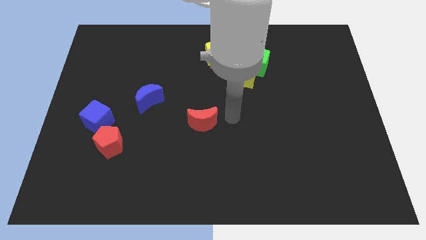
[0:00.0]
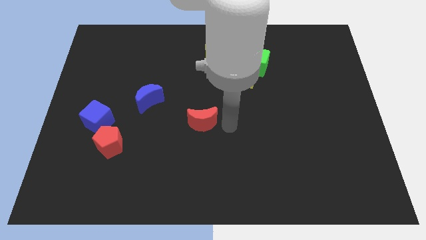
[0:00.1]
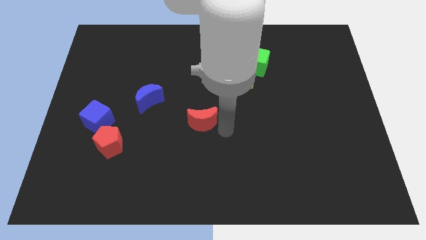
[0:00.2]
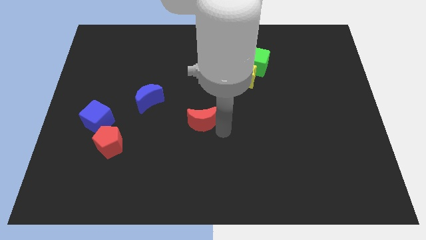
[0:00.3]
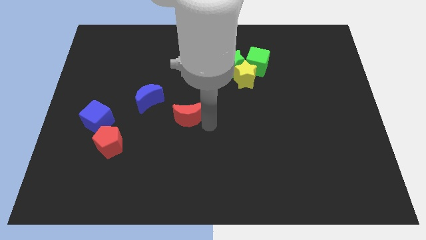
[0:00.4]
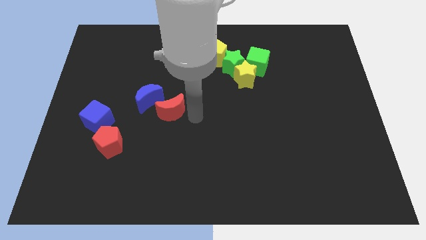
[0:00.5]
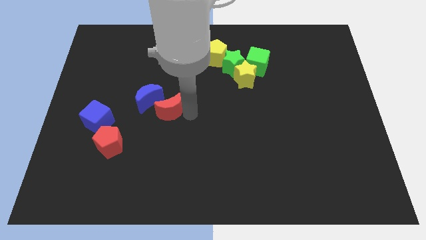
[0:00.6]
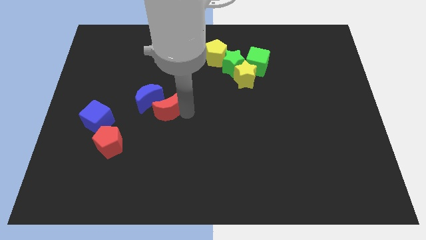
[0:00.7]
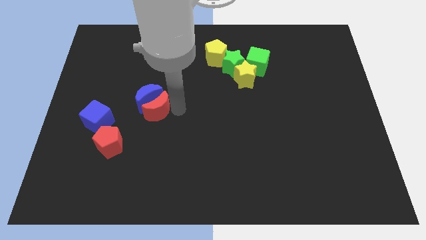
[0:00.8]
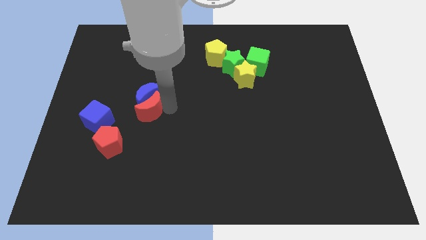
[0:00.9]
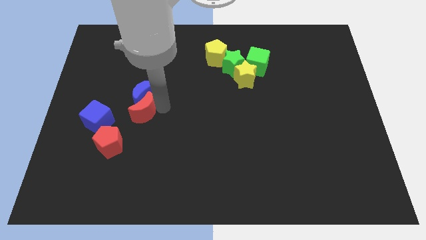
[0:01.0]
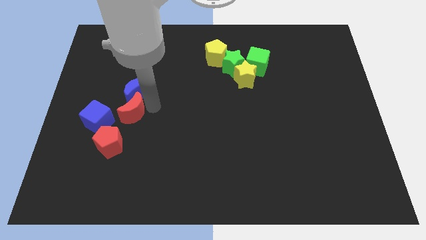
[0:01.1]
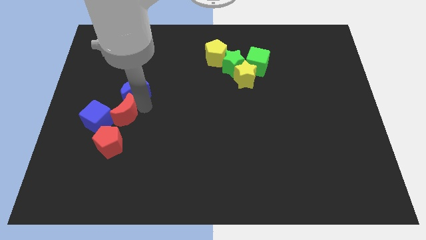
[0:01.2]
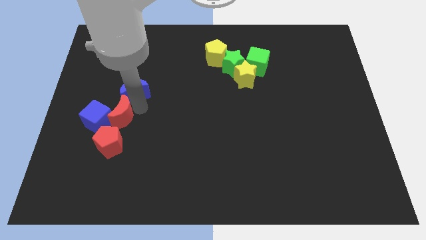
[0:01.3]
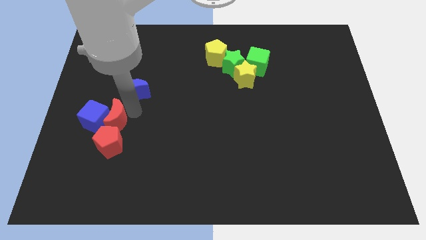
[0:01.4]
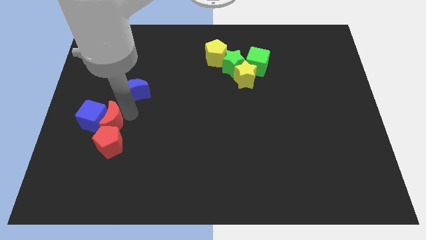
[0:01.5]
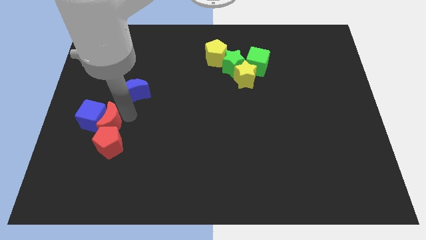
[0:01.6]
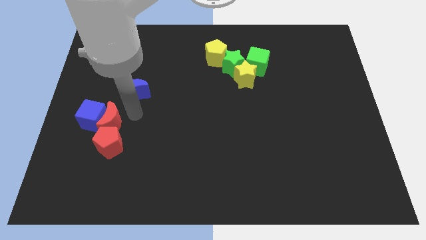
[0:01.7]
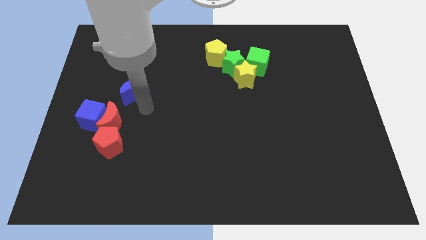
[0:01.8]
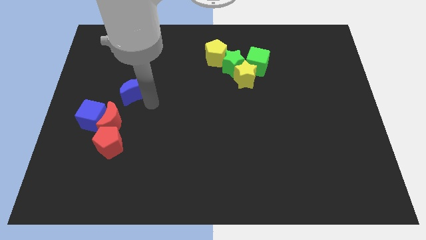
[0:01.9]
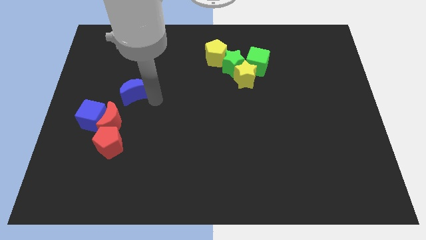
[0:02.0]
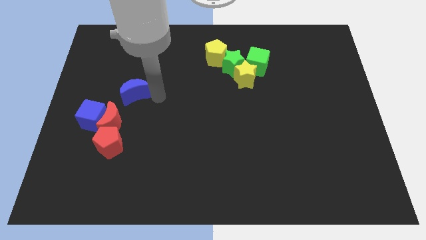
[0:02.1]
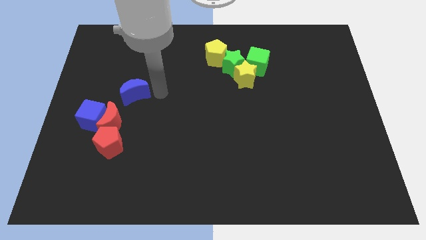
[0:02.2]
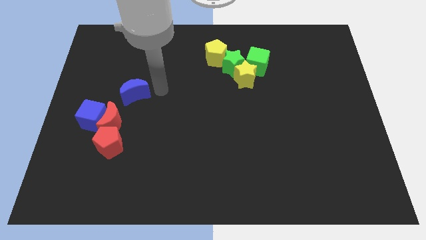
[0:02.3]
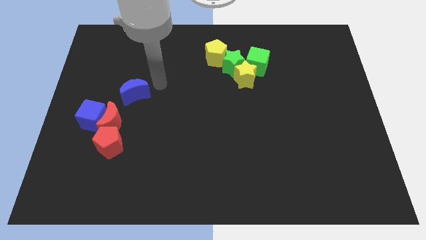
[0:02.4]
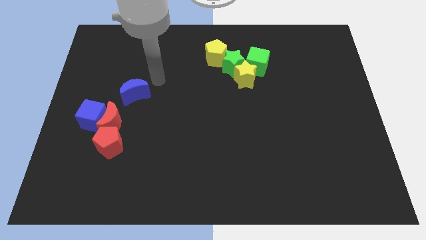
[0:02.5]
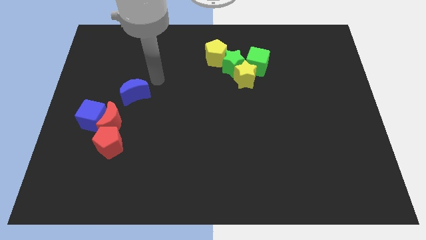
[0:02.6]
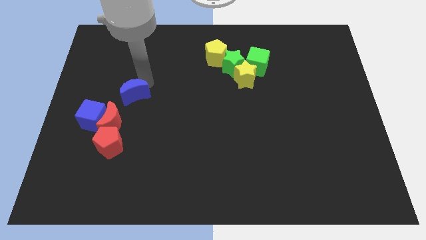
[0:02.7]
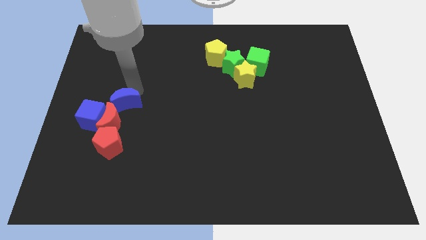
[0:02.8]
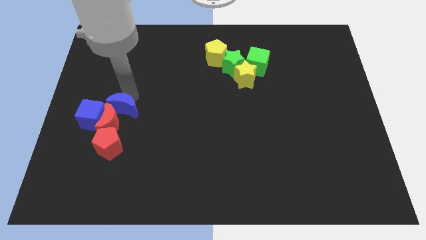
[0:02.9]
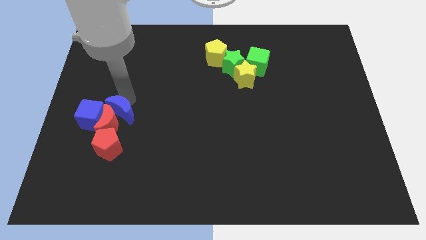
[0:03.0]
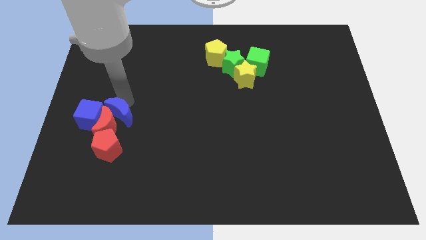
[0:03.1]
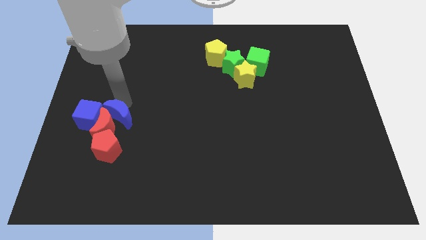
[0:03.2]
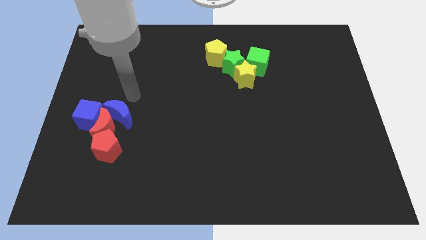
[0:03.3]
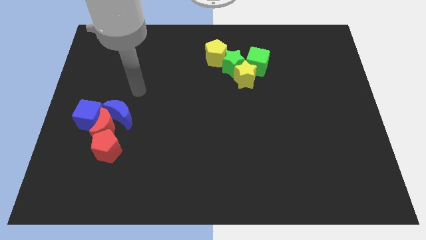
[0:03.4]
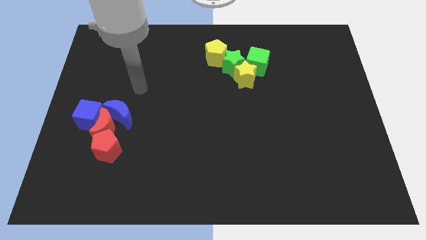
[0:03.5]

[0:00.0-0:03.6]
push the red crescent and blue cube with blue crescent

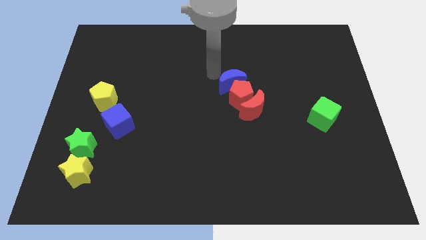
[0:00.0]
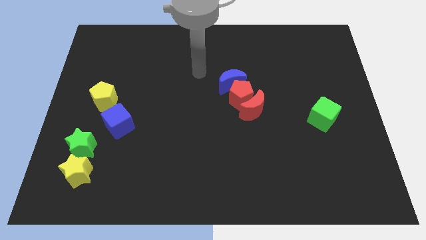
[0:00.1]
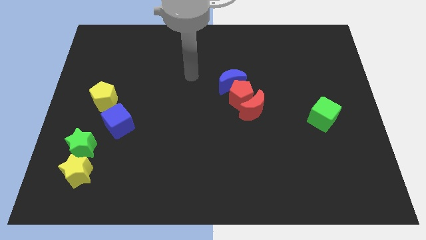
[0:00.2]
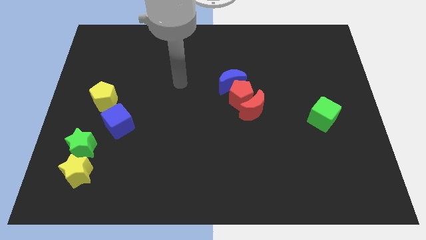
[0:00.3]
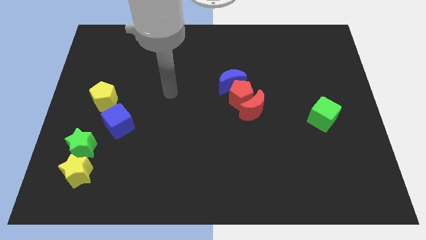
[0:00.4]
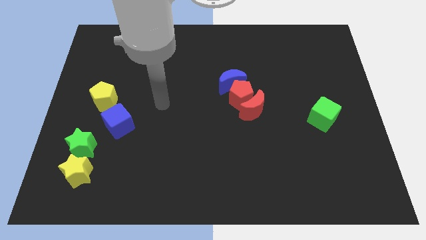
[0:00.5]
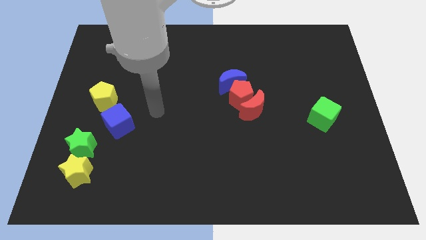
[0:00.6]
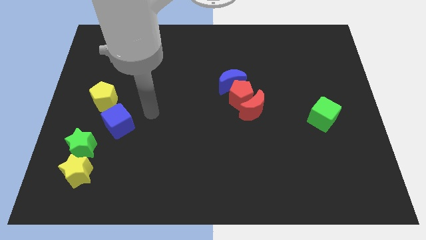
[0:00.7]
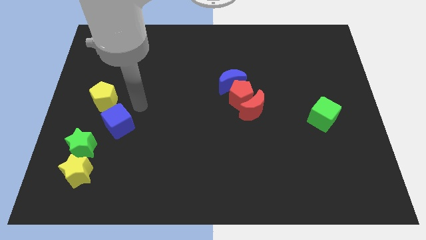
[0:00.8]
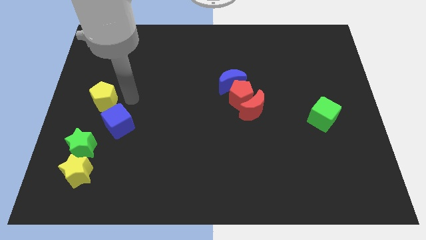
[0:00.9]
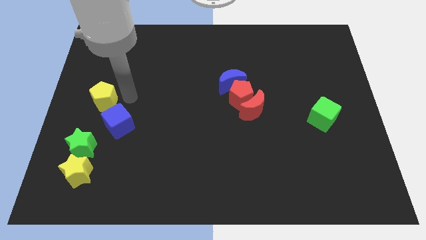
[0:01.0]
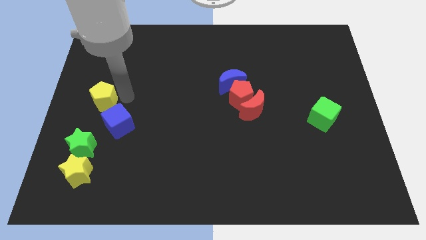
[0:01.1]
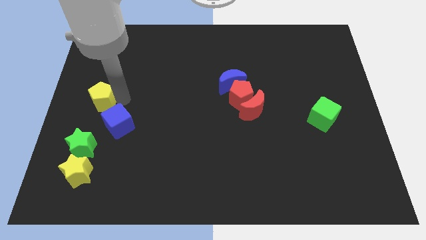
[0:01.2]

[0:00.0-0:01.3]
point your arm at the right of the yellow pentagon

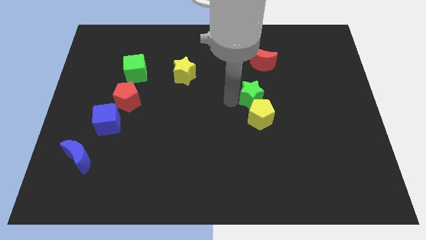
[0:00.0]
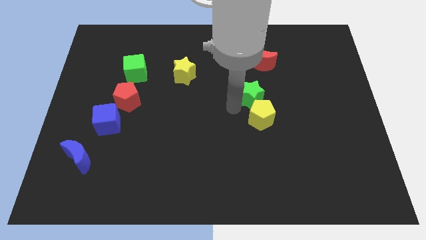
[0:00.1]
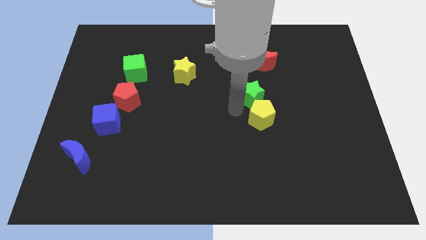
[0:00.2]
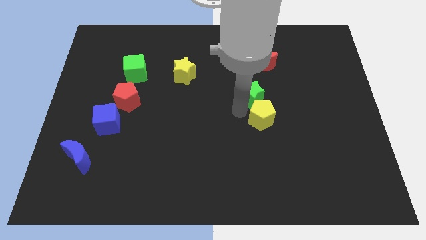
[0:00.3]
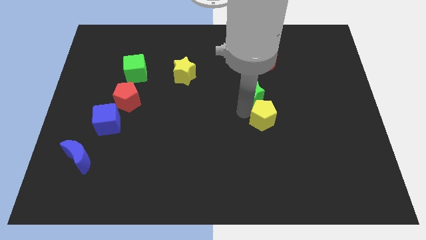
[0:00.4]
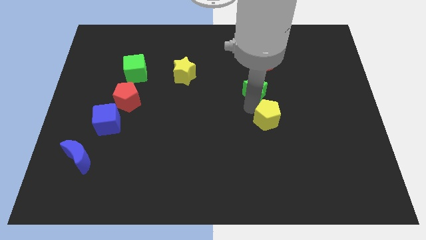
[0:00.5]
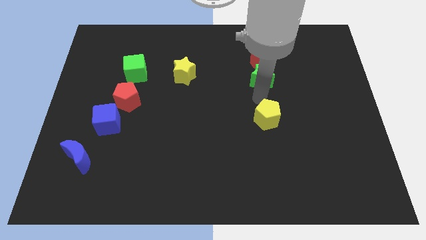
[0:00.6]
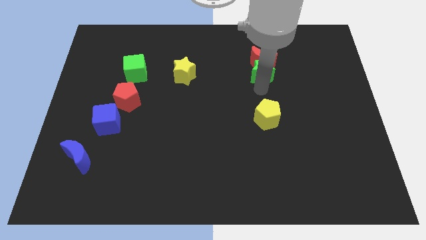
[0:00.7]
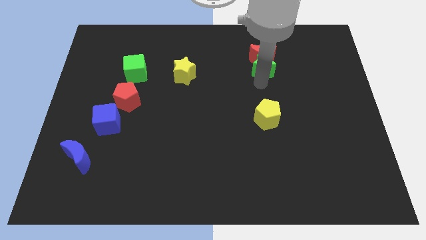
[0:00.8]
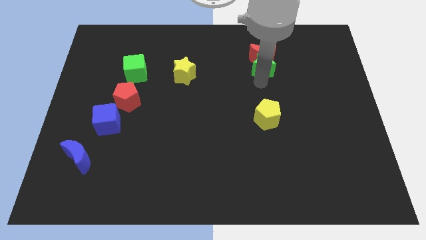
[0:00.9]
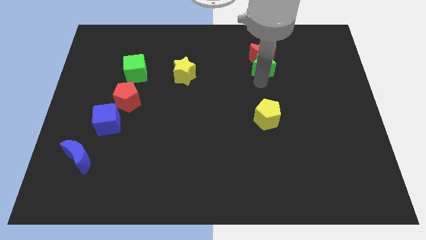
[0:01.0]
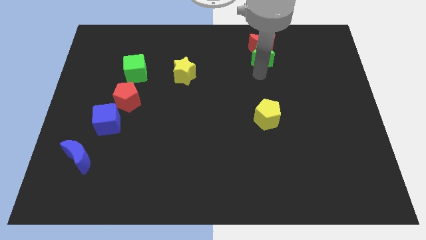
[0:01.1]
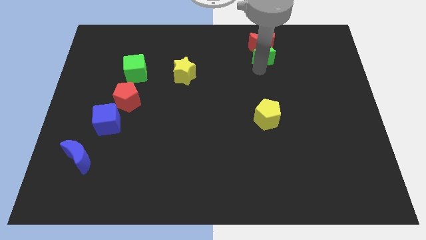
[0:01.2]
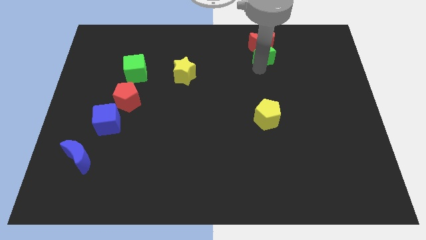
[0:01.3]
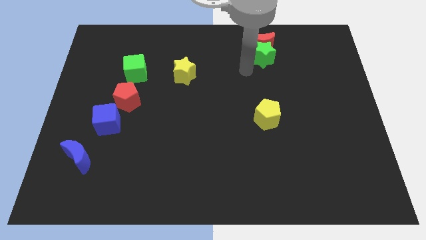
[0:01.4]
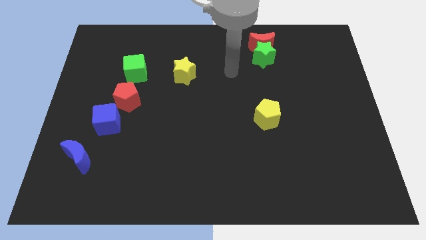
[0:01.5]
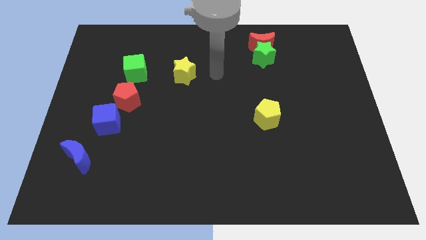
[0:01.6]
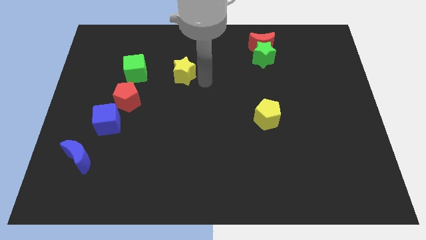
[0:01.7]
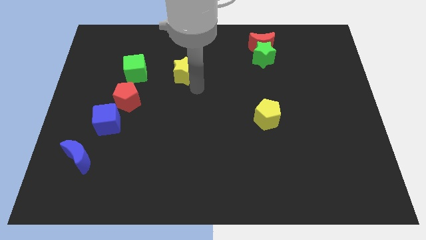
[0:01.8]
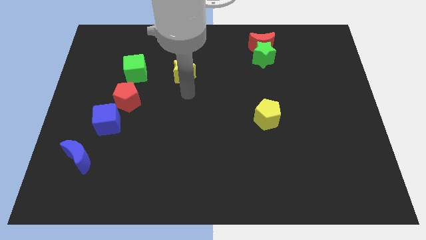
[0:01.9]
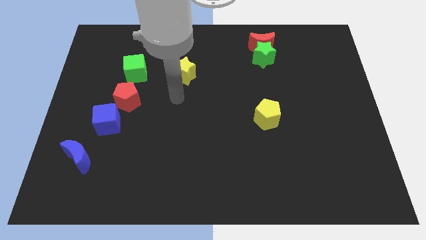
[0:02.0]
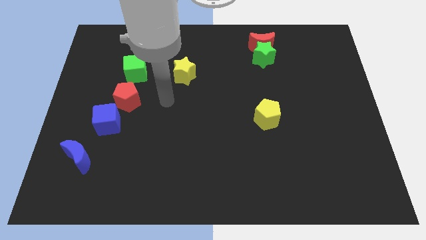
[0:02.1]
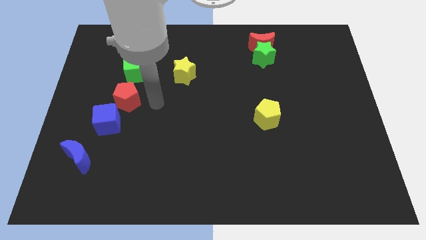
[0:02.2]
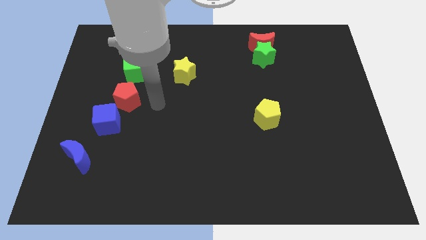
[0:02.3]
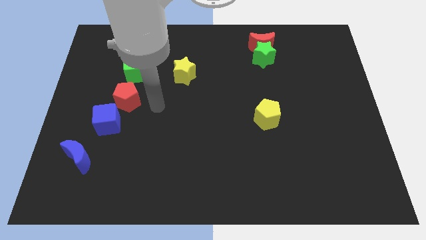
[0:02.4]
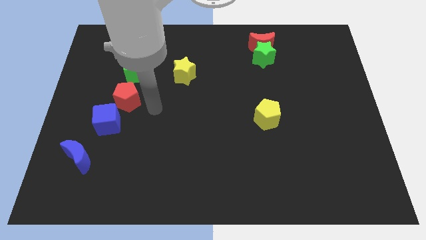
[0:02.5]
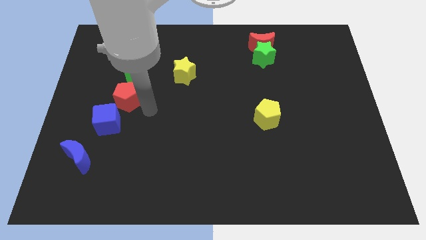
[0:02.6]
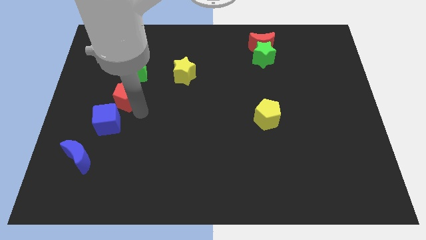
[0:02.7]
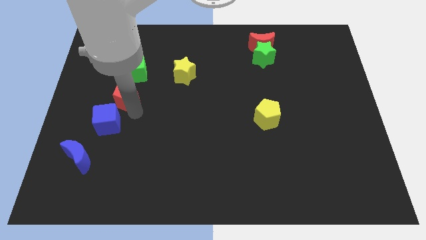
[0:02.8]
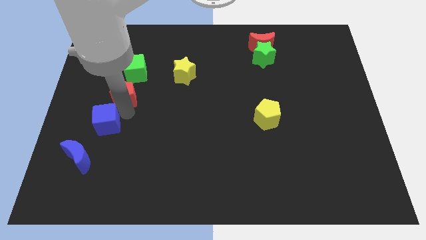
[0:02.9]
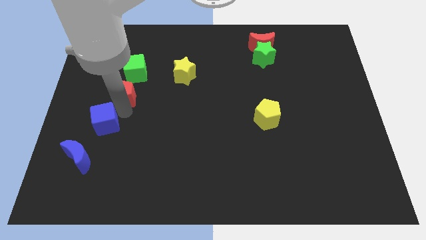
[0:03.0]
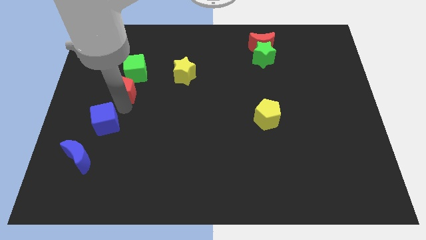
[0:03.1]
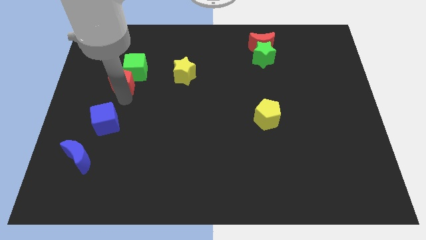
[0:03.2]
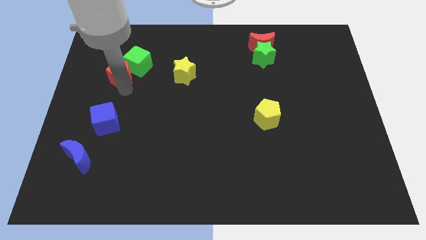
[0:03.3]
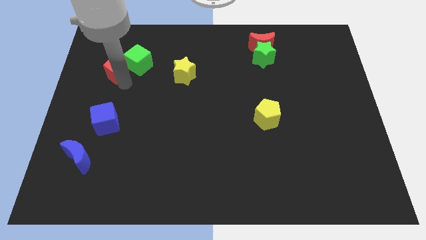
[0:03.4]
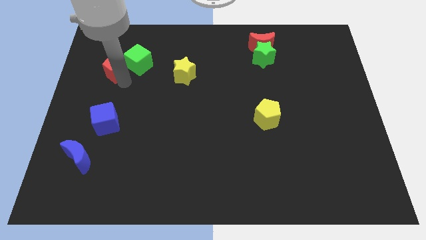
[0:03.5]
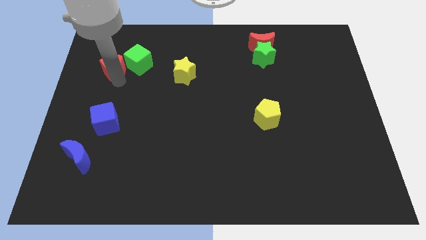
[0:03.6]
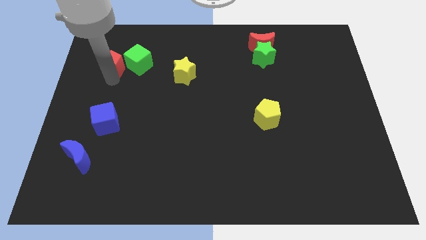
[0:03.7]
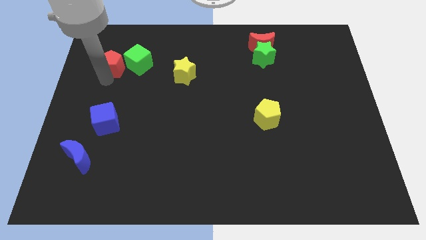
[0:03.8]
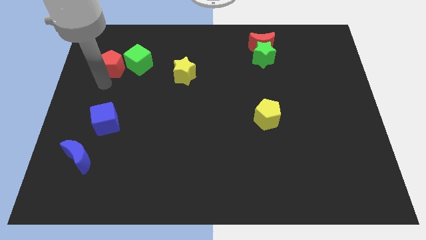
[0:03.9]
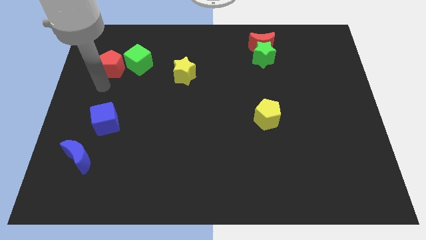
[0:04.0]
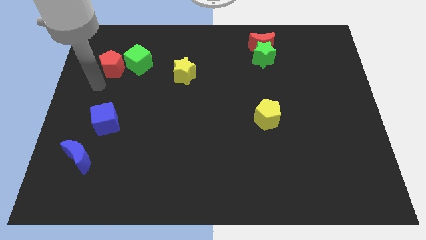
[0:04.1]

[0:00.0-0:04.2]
move red pentagon to the left of the green cub
